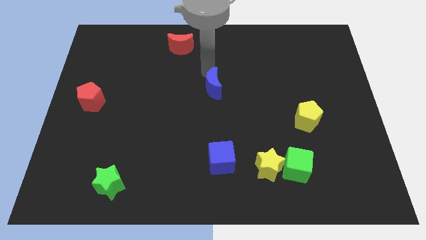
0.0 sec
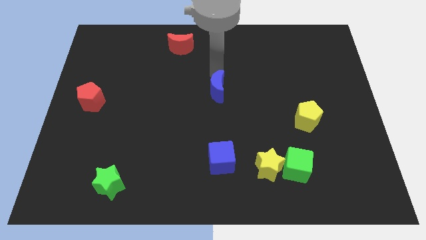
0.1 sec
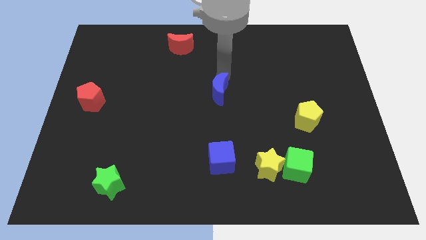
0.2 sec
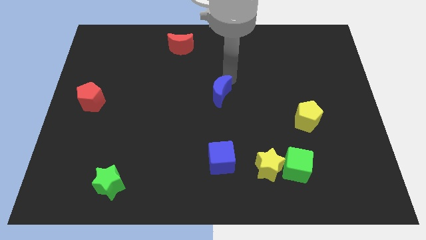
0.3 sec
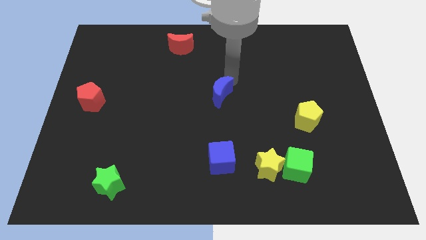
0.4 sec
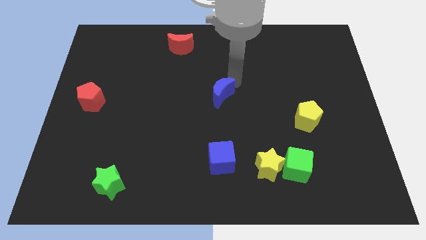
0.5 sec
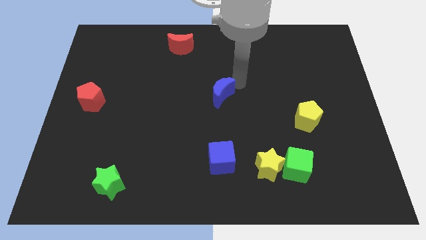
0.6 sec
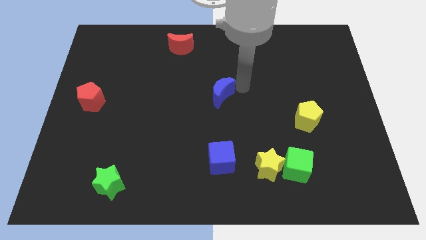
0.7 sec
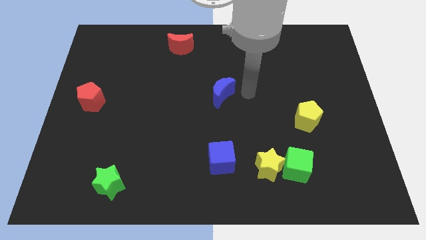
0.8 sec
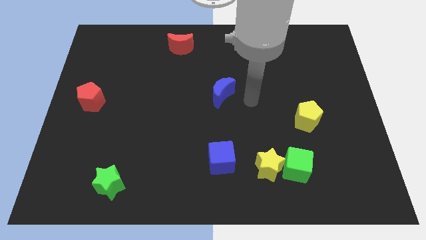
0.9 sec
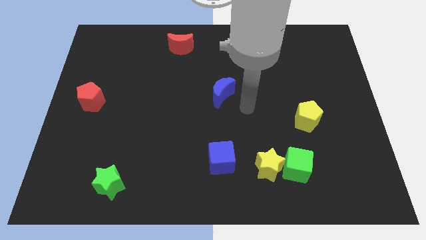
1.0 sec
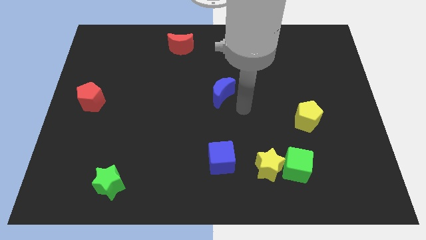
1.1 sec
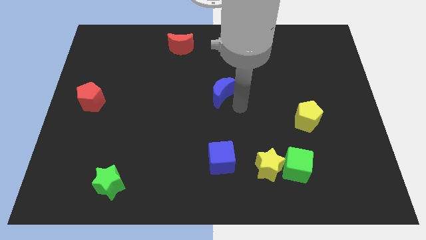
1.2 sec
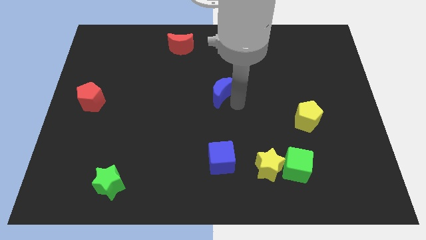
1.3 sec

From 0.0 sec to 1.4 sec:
move the blue crescent to the center of the board

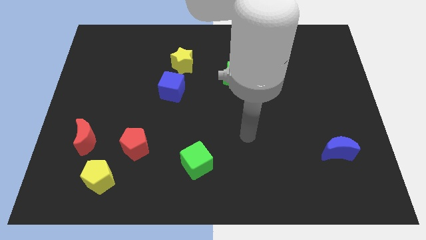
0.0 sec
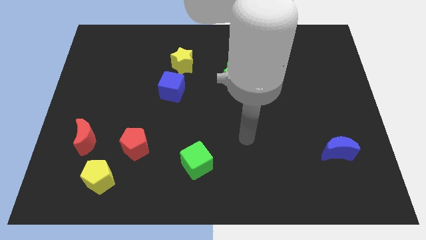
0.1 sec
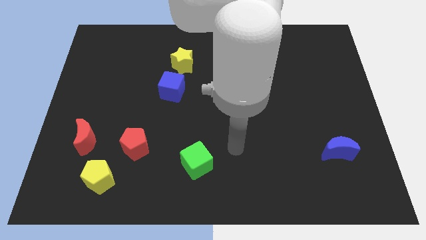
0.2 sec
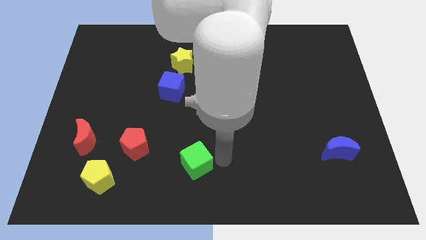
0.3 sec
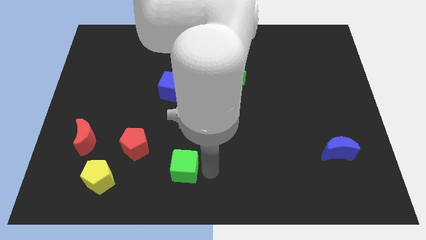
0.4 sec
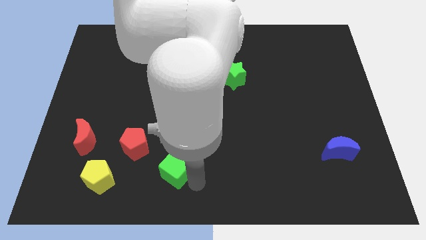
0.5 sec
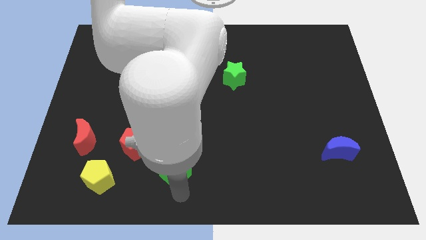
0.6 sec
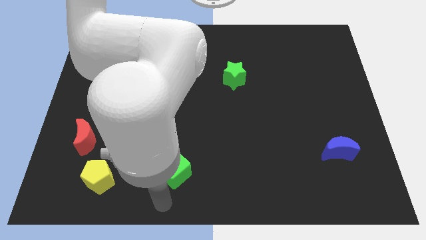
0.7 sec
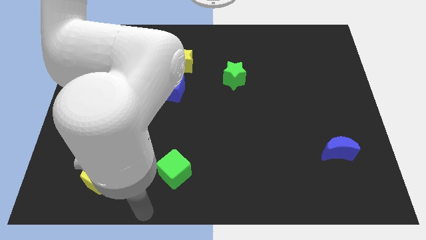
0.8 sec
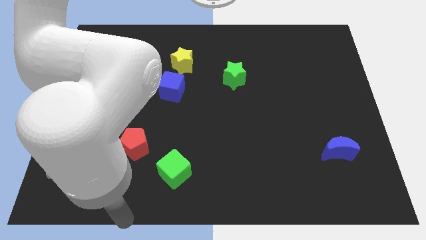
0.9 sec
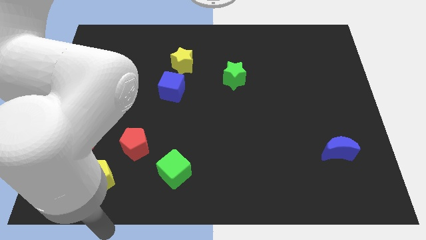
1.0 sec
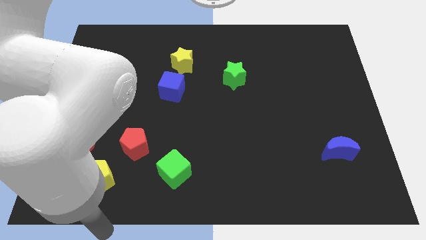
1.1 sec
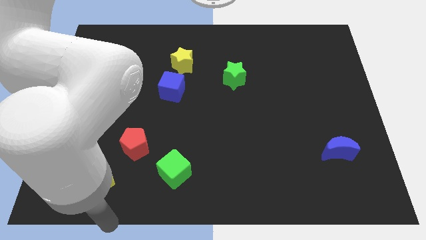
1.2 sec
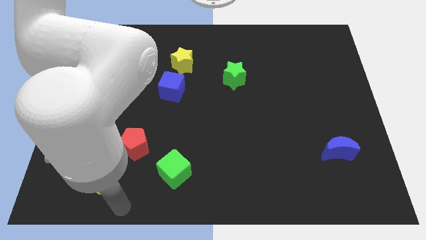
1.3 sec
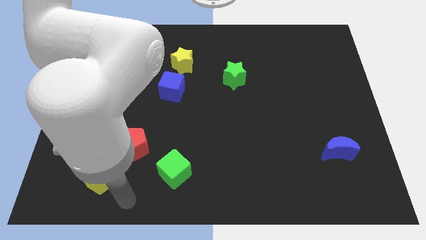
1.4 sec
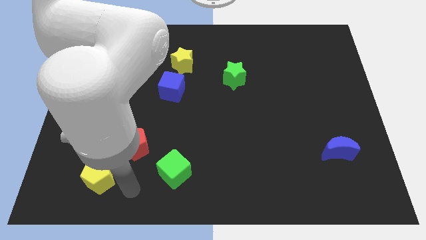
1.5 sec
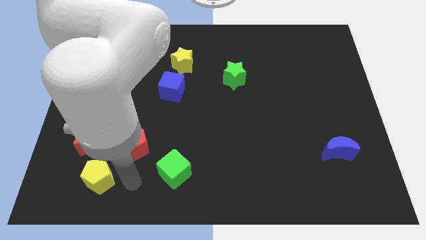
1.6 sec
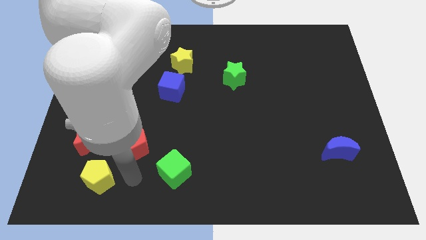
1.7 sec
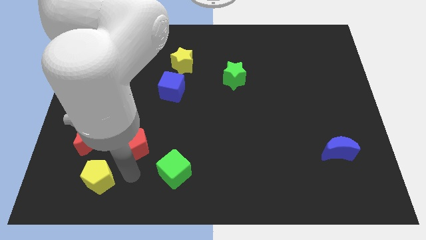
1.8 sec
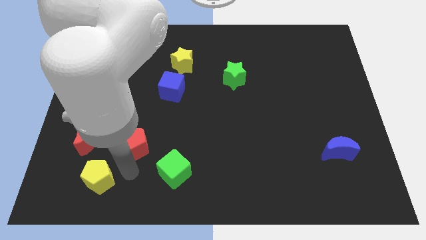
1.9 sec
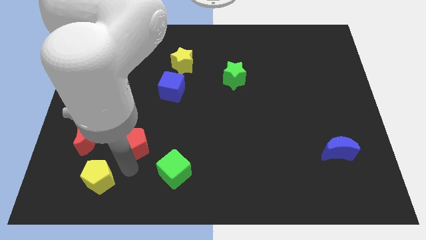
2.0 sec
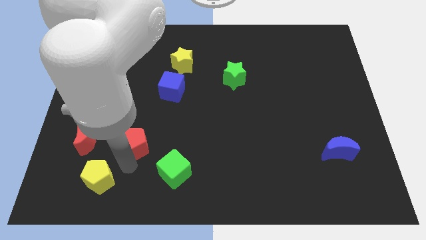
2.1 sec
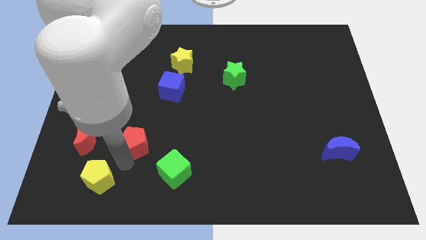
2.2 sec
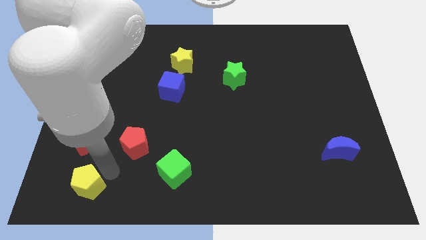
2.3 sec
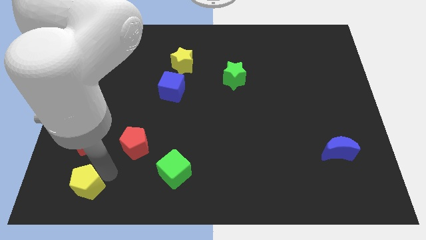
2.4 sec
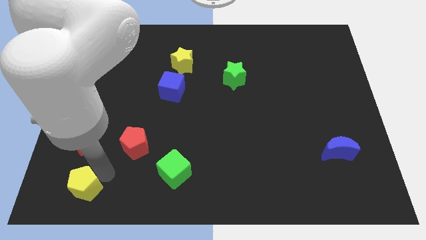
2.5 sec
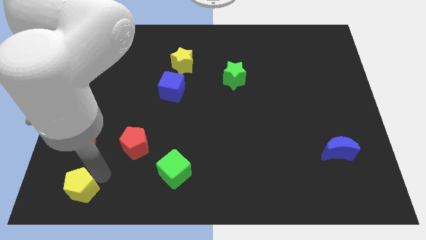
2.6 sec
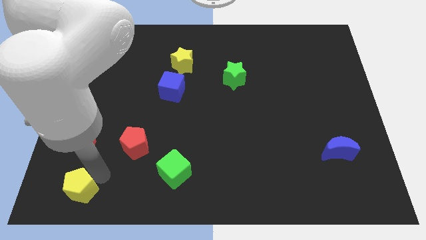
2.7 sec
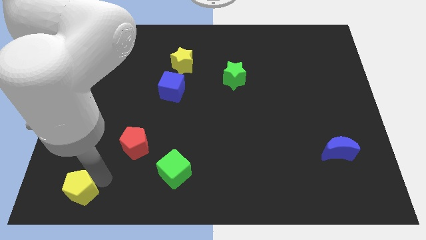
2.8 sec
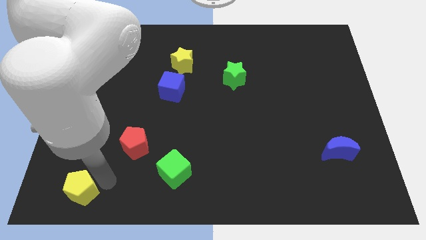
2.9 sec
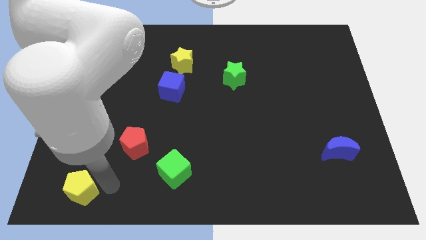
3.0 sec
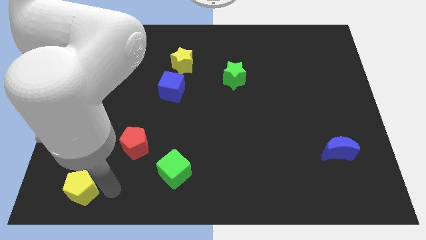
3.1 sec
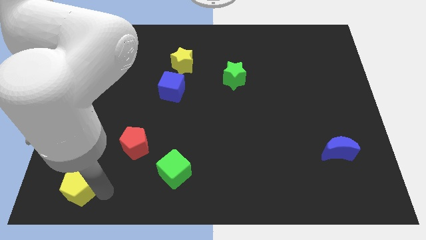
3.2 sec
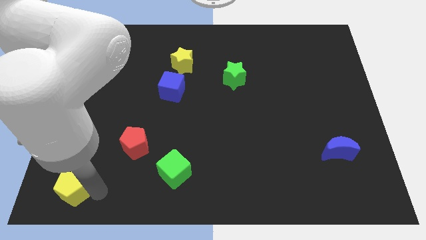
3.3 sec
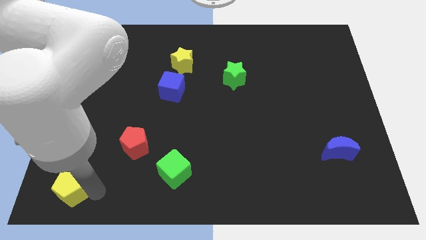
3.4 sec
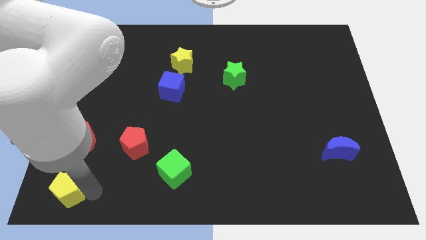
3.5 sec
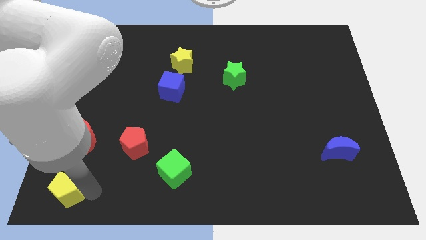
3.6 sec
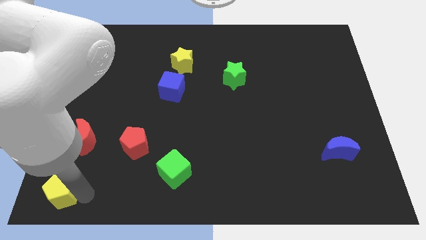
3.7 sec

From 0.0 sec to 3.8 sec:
move the yellow pentagon towards the bottom left corner of the board

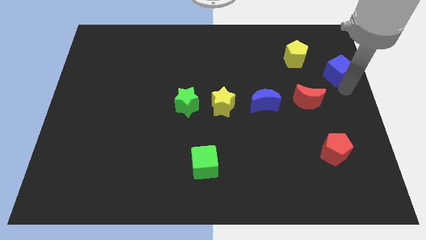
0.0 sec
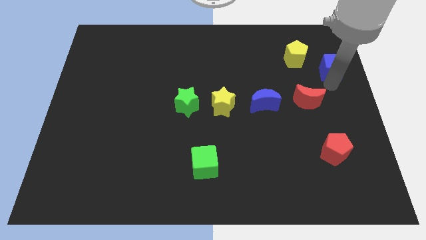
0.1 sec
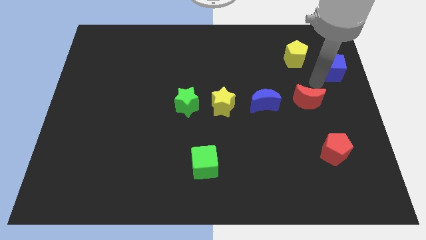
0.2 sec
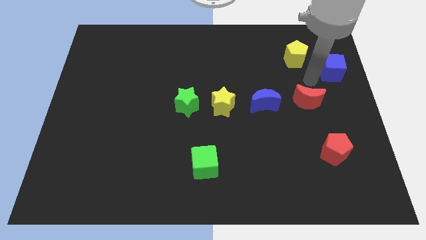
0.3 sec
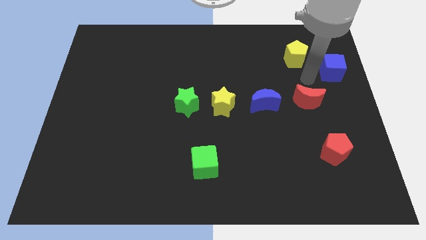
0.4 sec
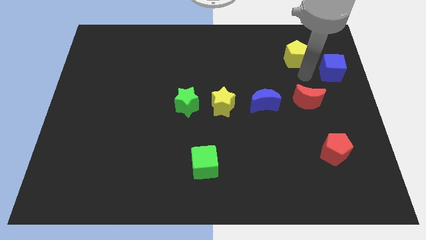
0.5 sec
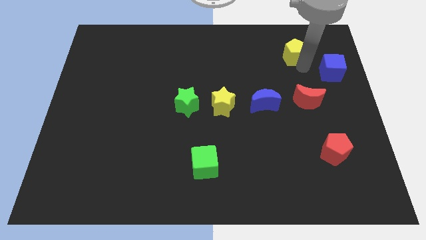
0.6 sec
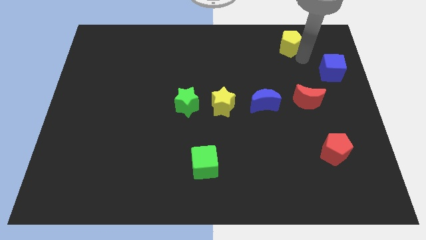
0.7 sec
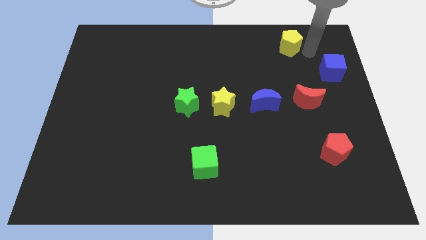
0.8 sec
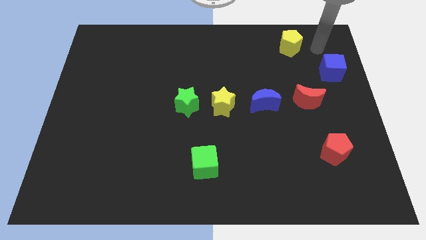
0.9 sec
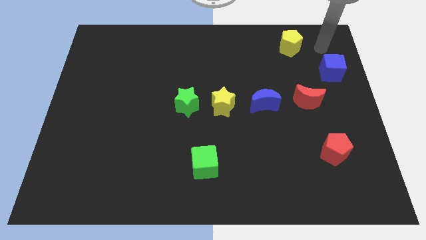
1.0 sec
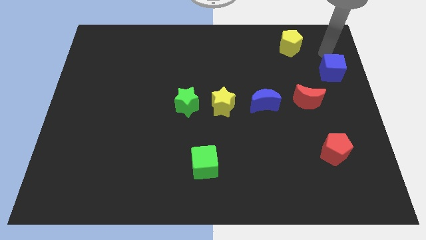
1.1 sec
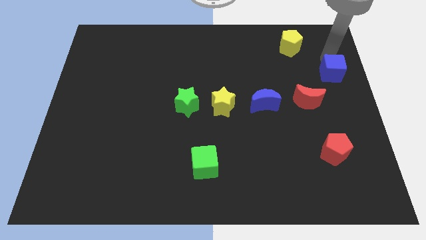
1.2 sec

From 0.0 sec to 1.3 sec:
push the yellow pentagon slightly upwards

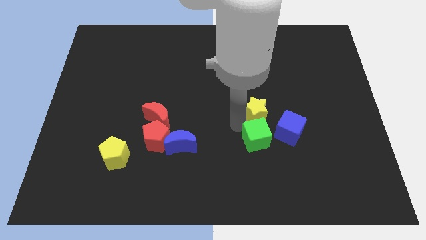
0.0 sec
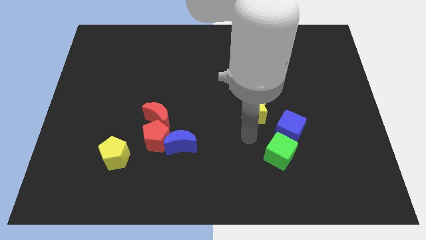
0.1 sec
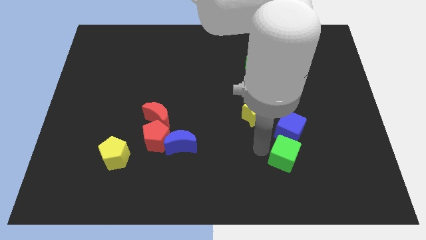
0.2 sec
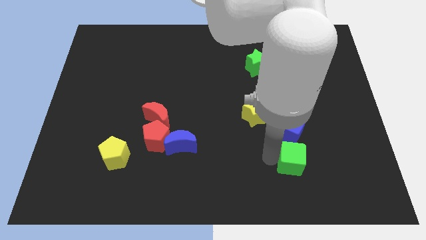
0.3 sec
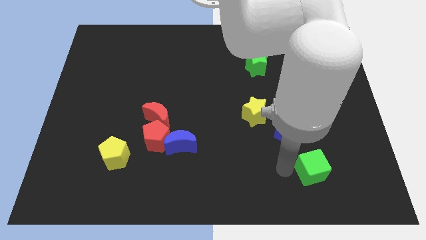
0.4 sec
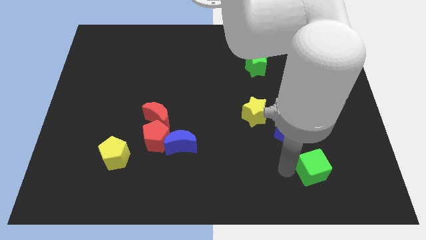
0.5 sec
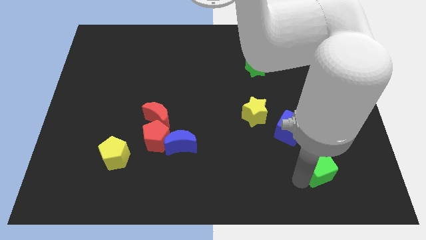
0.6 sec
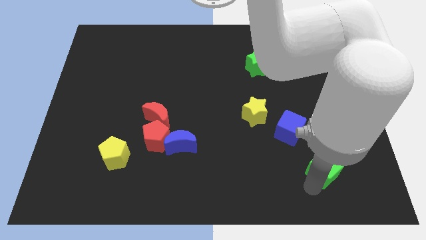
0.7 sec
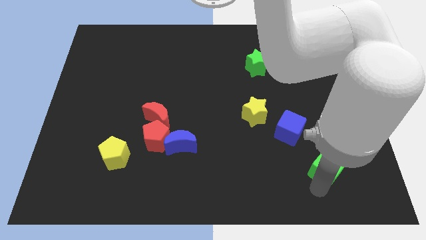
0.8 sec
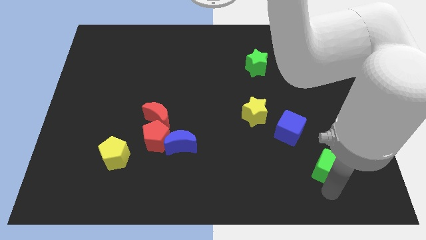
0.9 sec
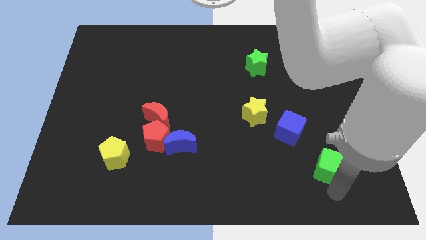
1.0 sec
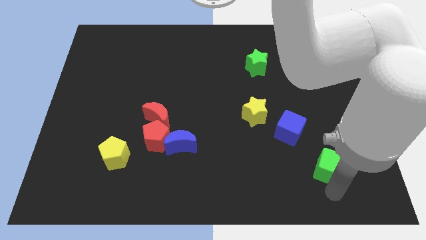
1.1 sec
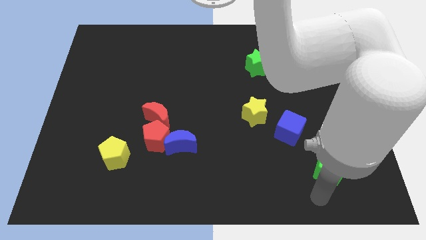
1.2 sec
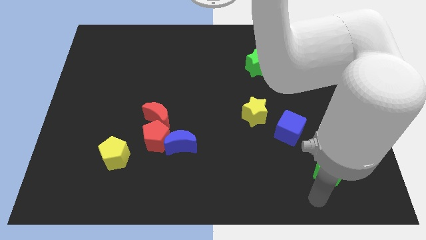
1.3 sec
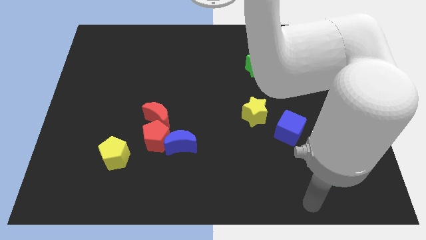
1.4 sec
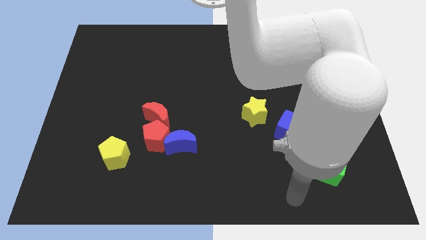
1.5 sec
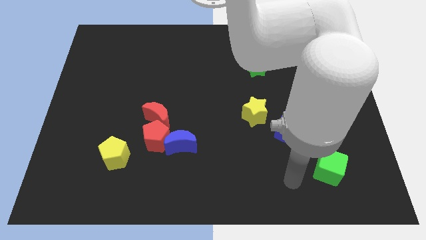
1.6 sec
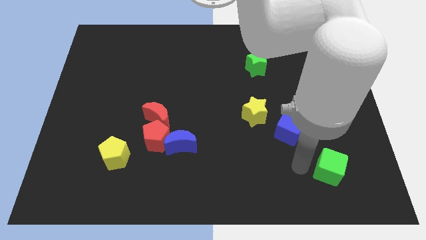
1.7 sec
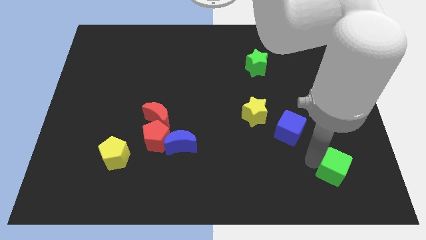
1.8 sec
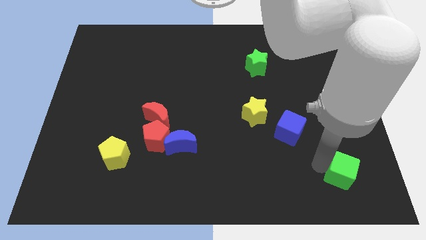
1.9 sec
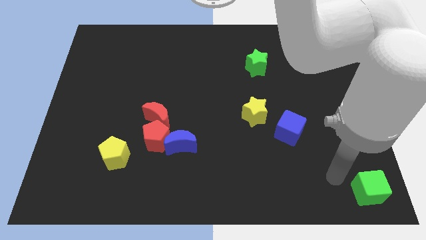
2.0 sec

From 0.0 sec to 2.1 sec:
separate the green cube from yellow star

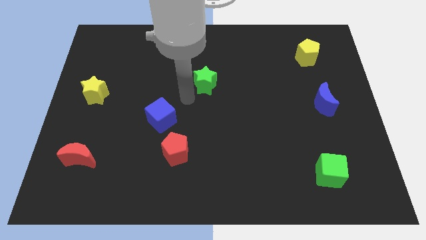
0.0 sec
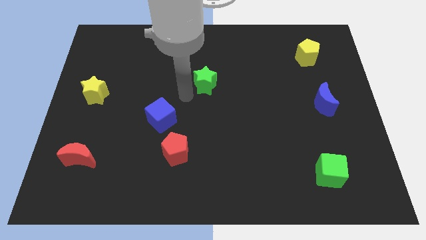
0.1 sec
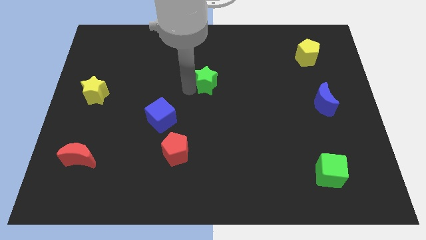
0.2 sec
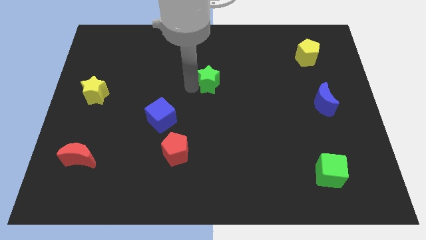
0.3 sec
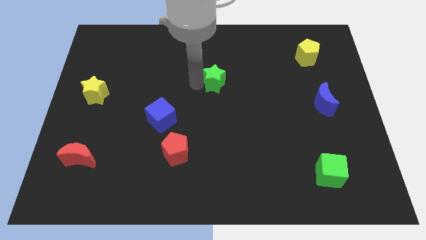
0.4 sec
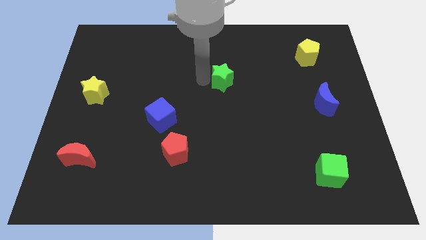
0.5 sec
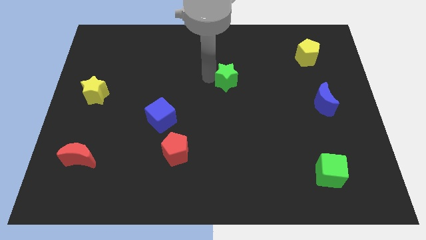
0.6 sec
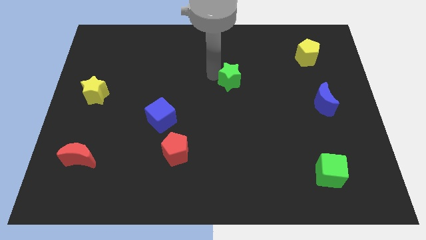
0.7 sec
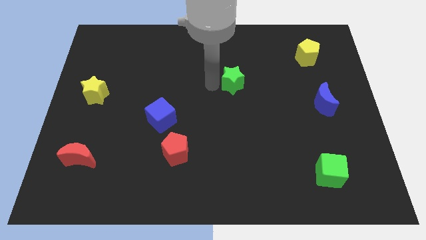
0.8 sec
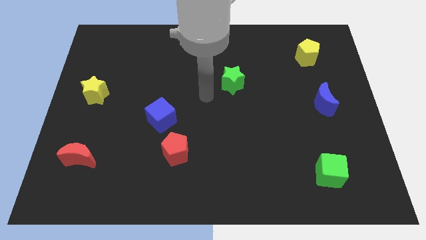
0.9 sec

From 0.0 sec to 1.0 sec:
move the green star slightly to the right
